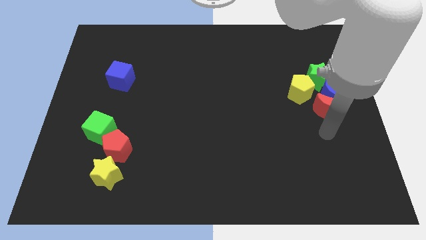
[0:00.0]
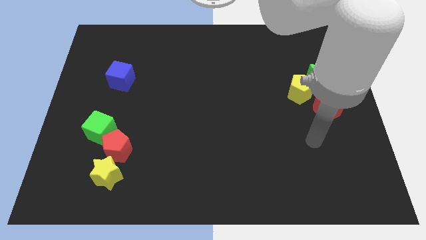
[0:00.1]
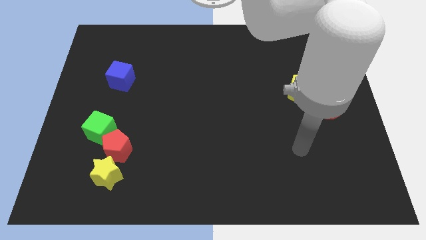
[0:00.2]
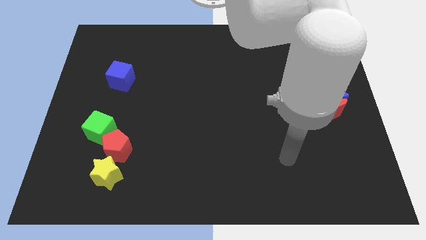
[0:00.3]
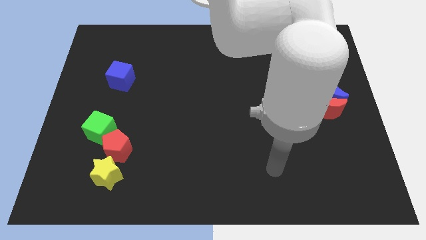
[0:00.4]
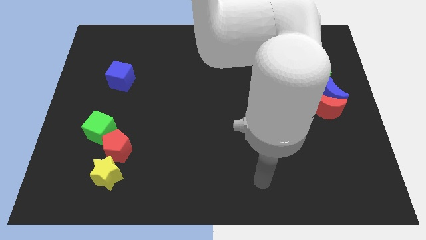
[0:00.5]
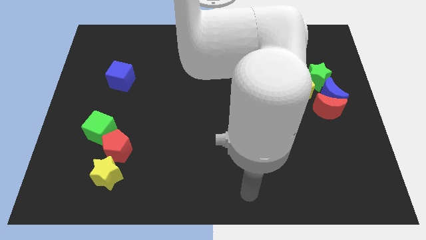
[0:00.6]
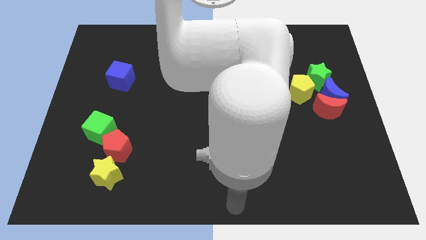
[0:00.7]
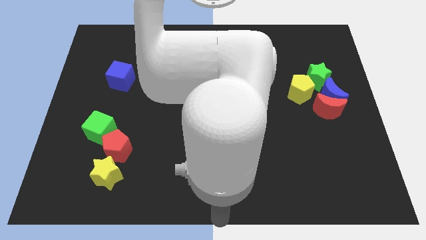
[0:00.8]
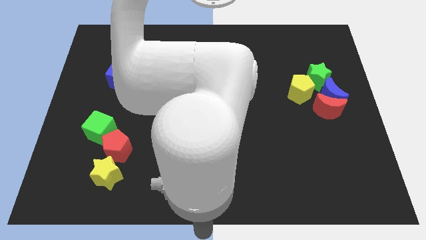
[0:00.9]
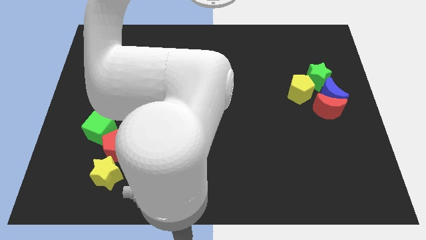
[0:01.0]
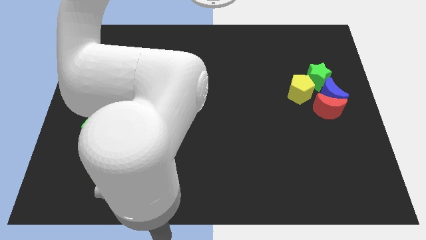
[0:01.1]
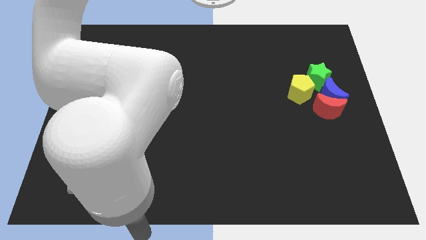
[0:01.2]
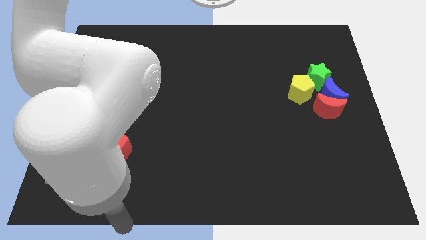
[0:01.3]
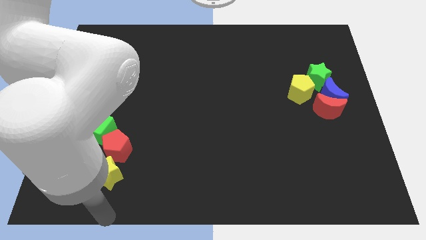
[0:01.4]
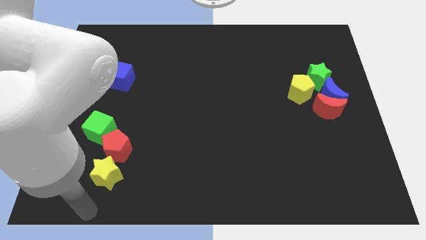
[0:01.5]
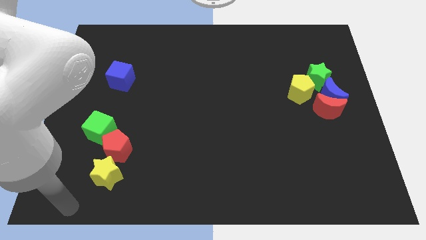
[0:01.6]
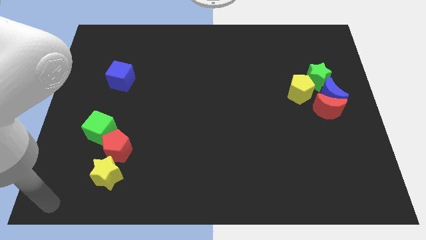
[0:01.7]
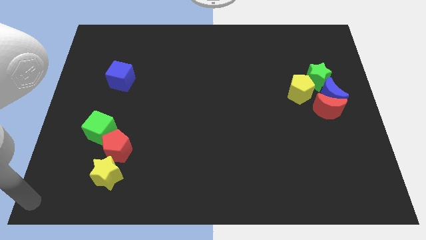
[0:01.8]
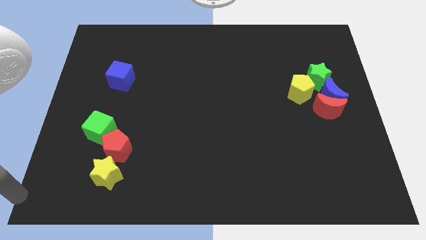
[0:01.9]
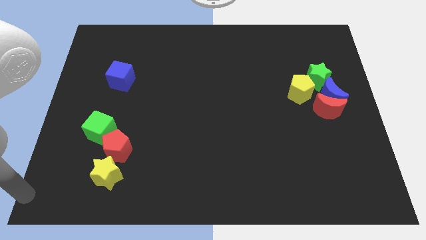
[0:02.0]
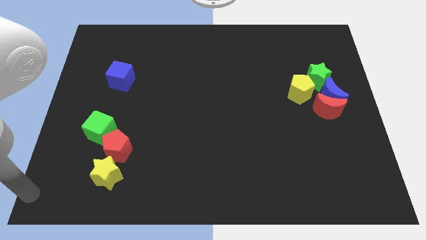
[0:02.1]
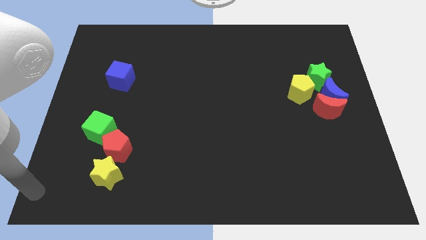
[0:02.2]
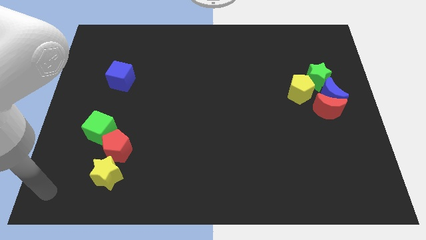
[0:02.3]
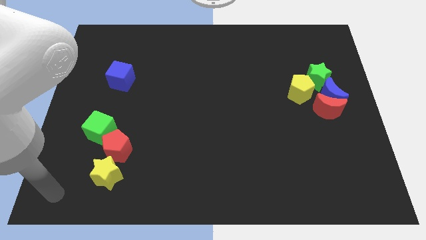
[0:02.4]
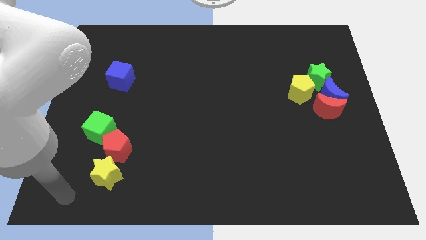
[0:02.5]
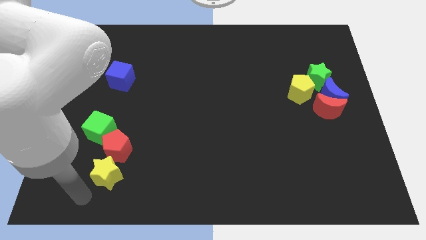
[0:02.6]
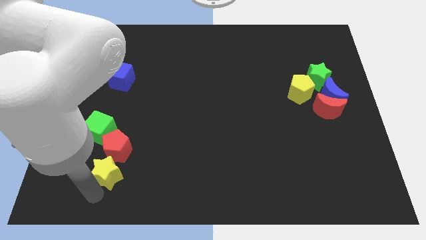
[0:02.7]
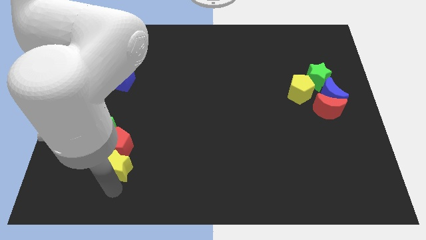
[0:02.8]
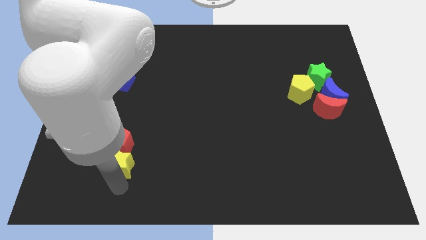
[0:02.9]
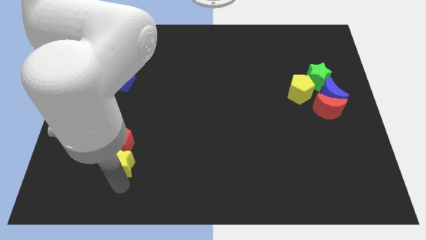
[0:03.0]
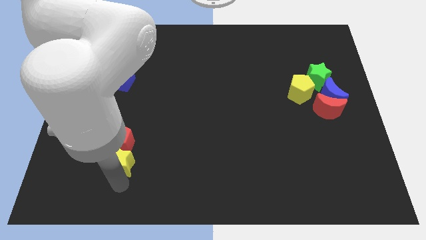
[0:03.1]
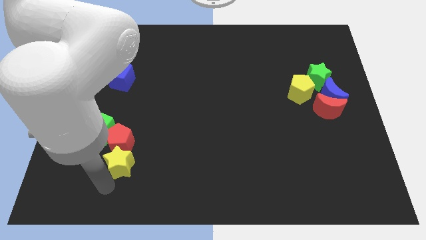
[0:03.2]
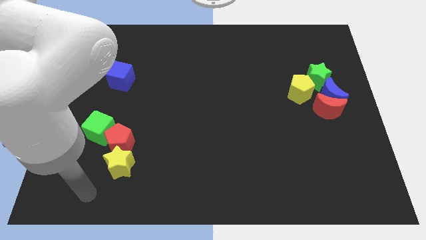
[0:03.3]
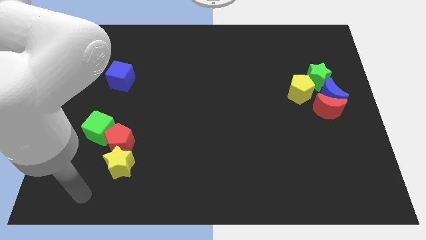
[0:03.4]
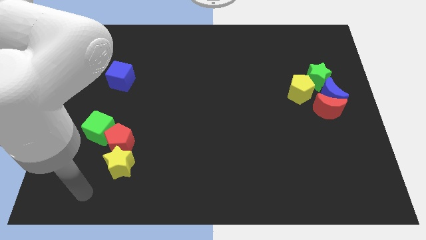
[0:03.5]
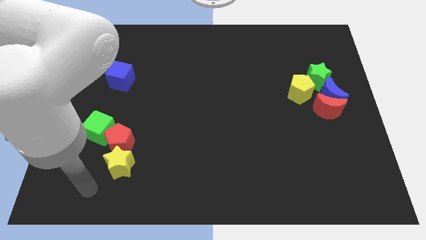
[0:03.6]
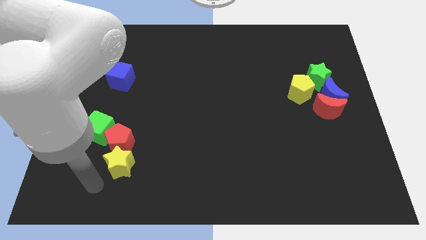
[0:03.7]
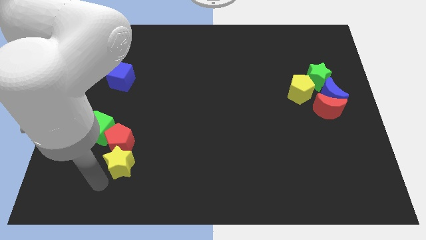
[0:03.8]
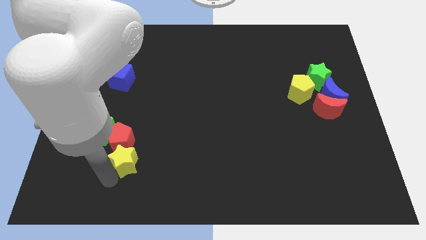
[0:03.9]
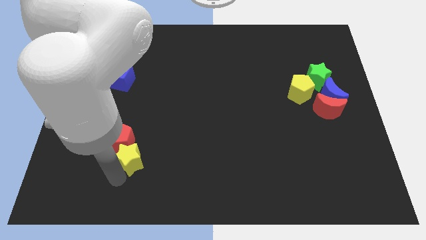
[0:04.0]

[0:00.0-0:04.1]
move the yellow star slightly into the bottom side of the red pentagon

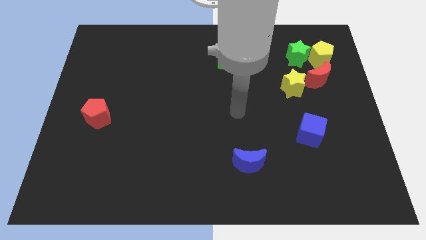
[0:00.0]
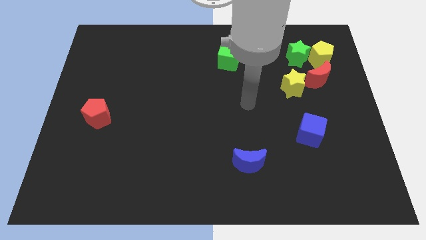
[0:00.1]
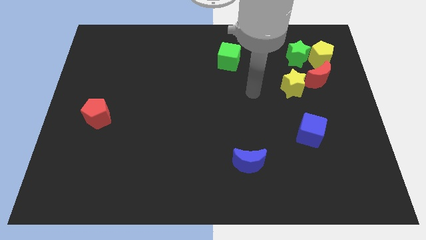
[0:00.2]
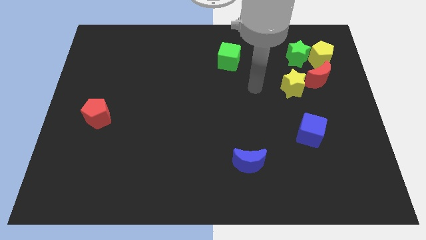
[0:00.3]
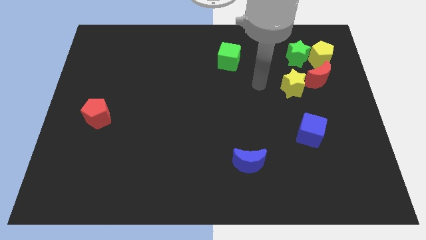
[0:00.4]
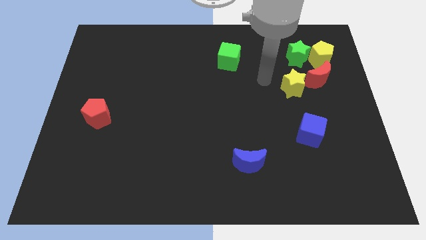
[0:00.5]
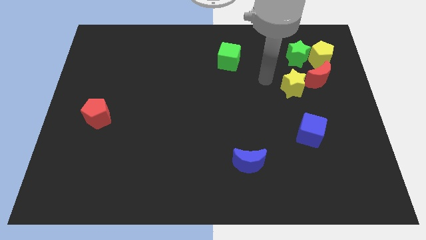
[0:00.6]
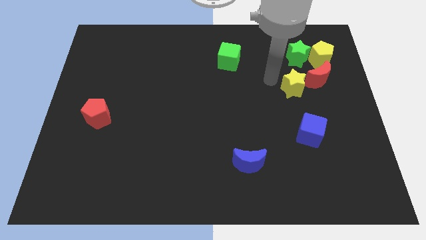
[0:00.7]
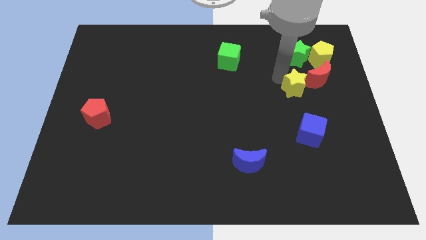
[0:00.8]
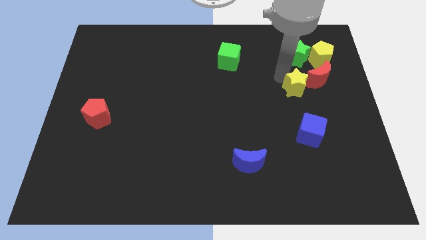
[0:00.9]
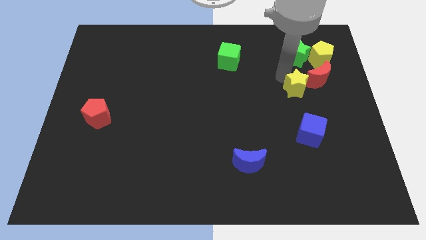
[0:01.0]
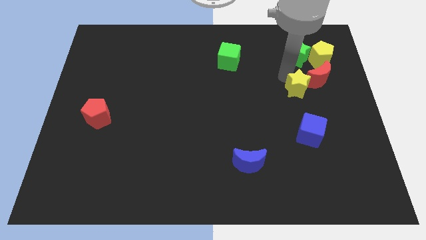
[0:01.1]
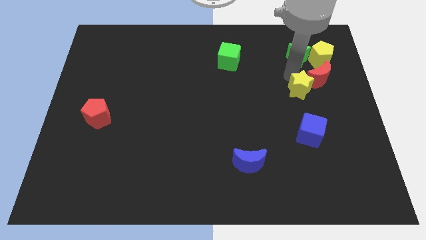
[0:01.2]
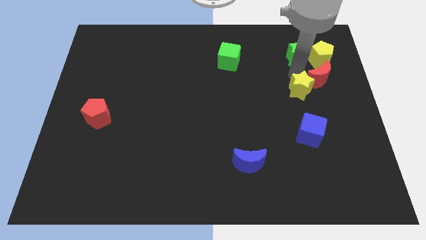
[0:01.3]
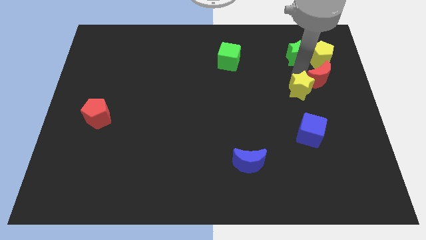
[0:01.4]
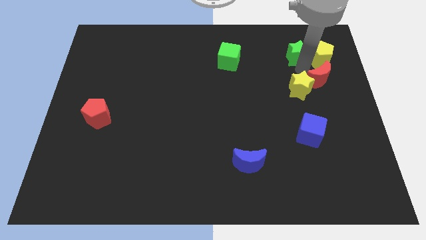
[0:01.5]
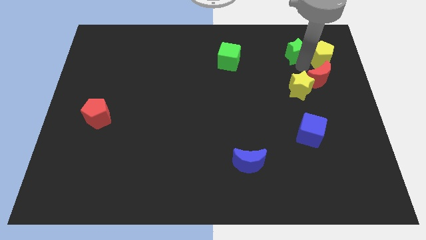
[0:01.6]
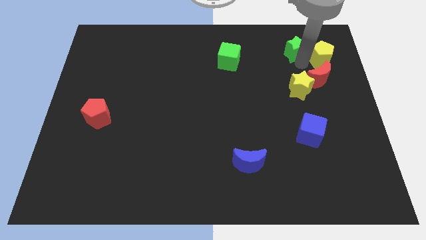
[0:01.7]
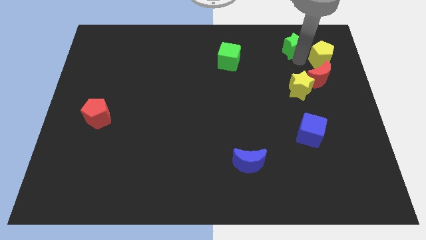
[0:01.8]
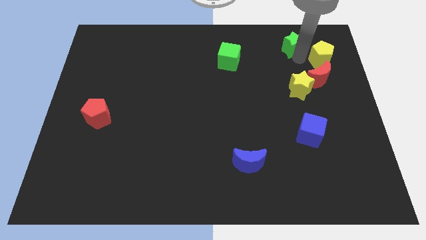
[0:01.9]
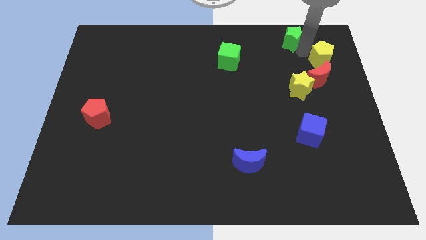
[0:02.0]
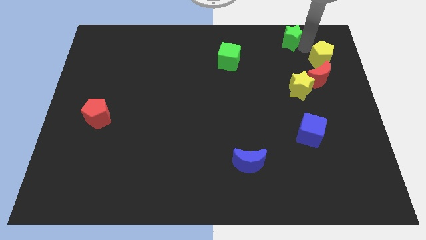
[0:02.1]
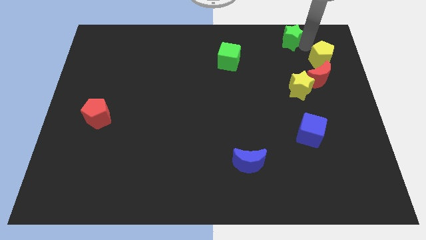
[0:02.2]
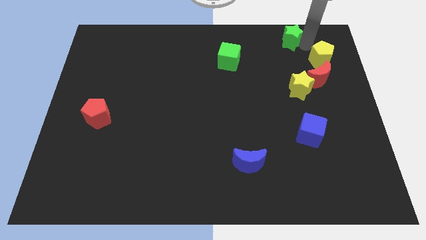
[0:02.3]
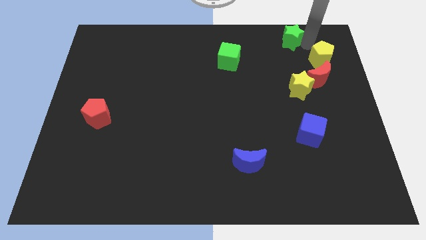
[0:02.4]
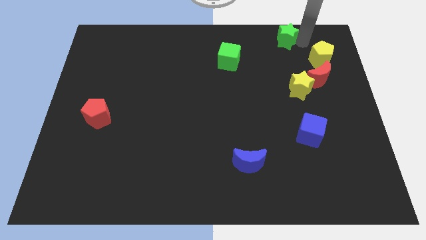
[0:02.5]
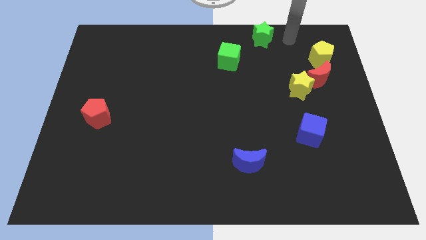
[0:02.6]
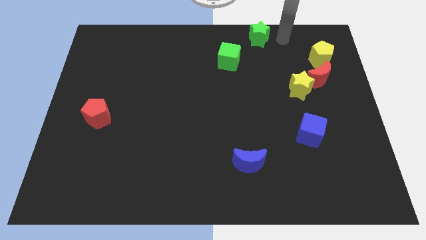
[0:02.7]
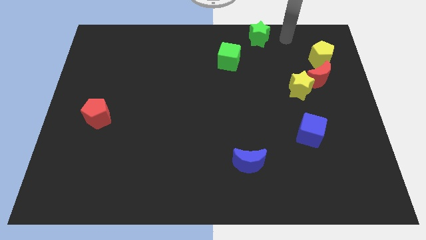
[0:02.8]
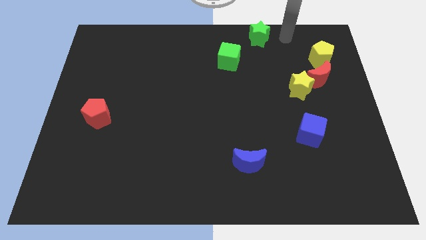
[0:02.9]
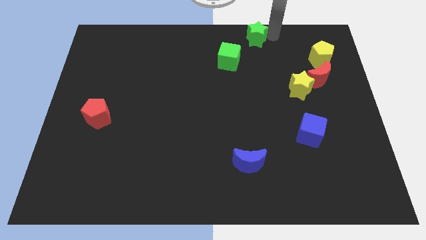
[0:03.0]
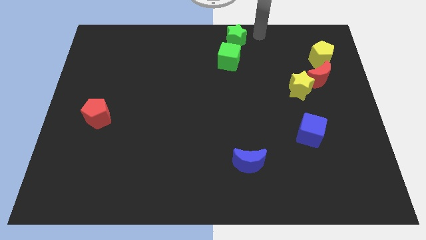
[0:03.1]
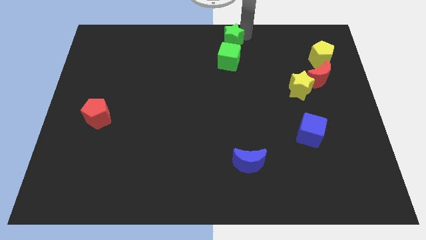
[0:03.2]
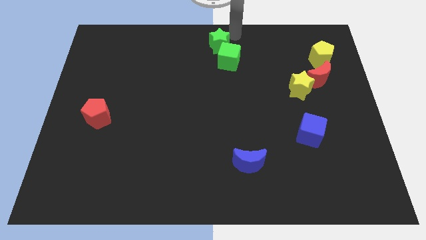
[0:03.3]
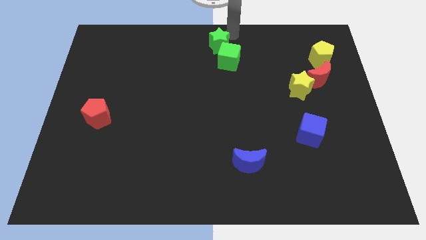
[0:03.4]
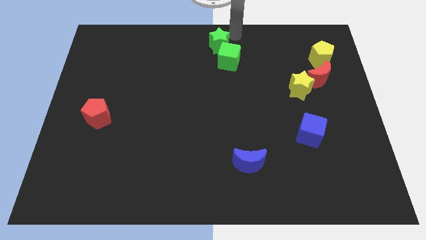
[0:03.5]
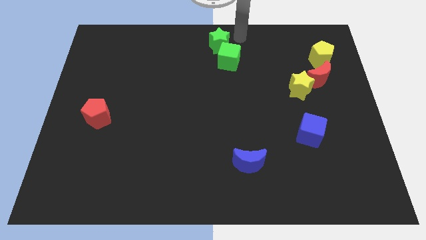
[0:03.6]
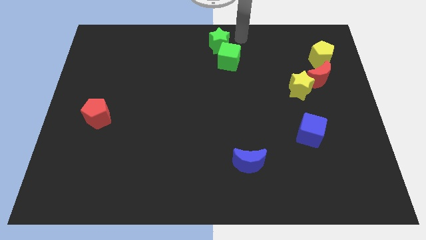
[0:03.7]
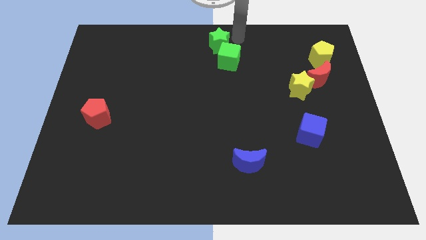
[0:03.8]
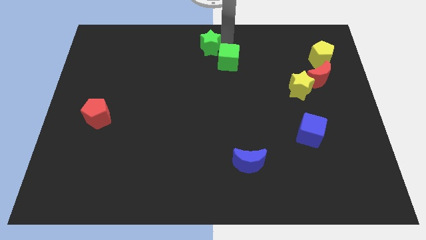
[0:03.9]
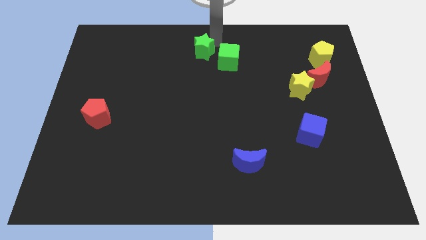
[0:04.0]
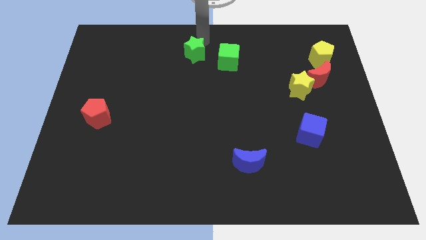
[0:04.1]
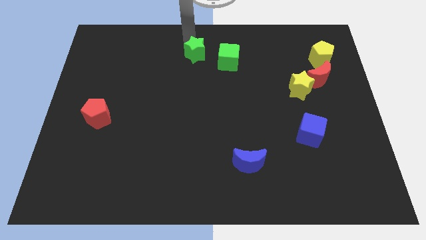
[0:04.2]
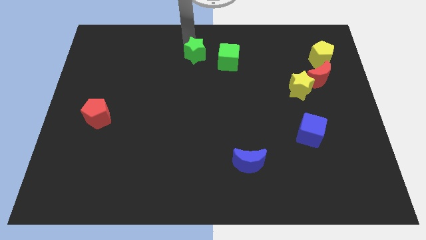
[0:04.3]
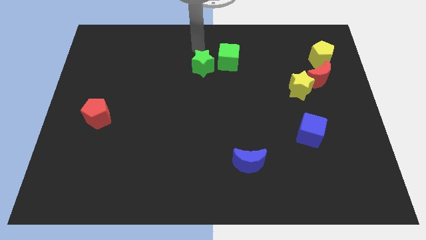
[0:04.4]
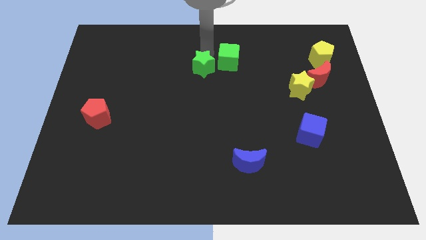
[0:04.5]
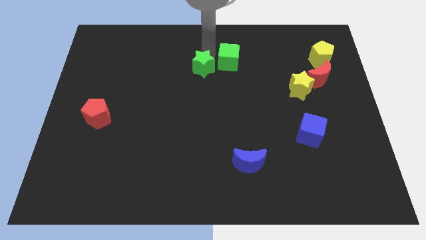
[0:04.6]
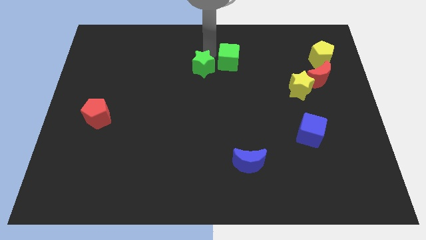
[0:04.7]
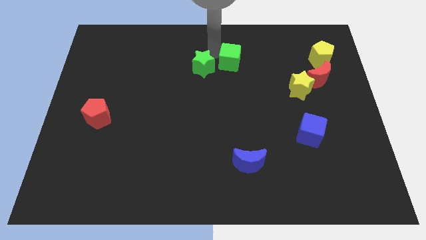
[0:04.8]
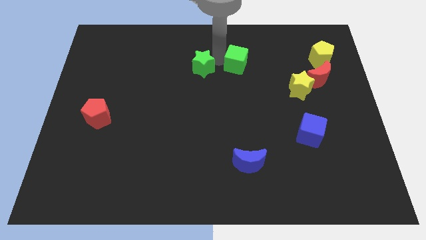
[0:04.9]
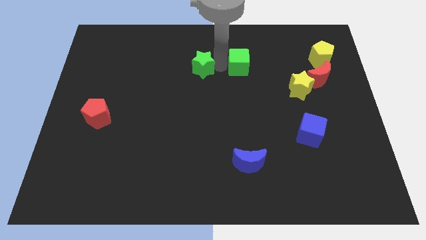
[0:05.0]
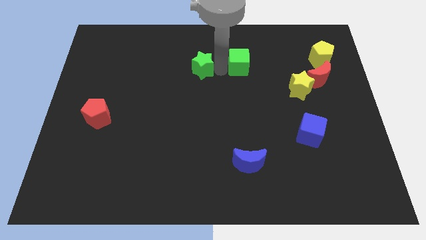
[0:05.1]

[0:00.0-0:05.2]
separate the green star from the group of blocks
